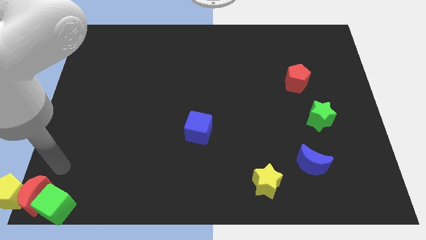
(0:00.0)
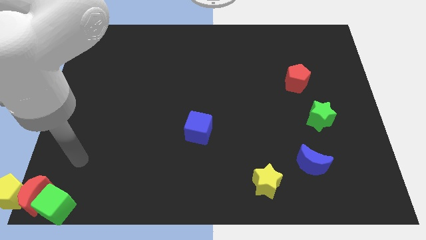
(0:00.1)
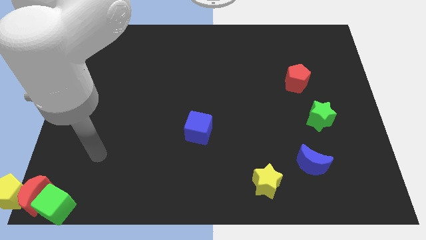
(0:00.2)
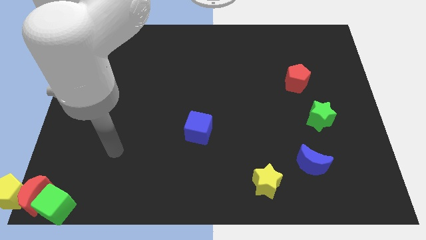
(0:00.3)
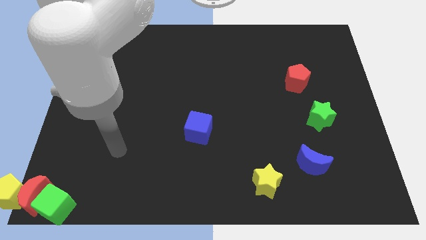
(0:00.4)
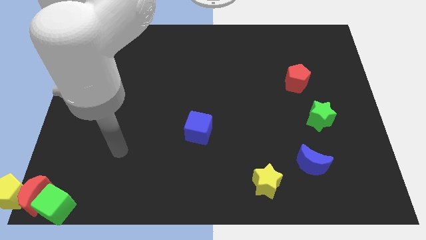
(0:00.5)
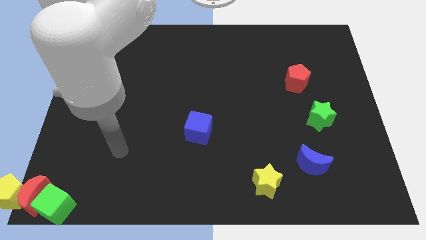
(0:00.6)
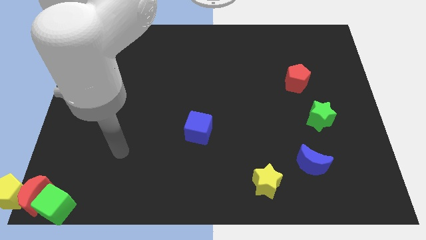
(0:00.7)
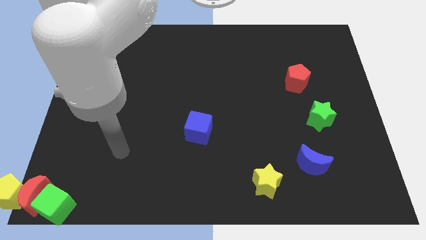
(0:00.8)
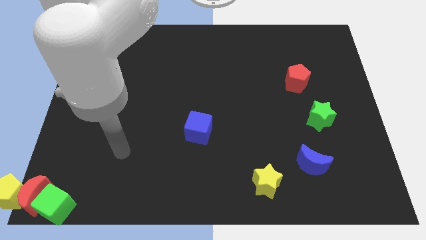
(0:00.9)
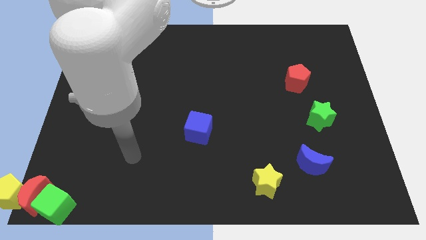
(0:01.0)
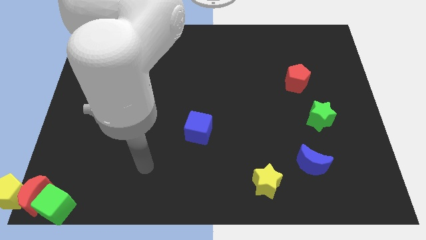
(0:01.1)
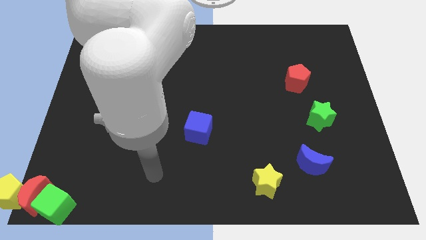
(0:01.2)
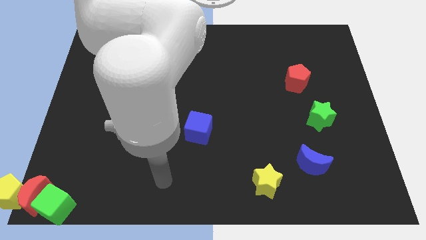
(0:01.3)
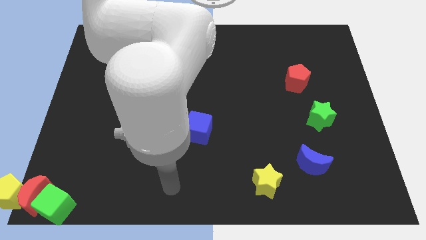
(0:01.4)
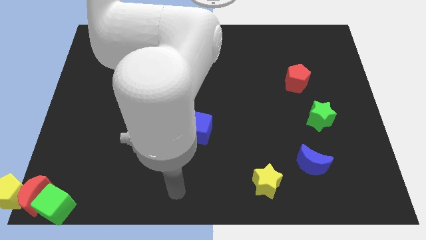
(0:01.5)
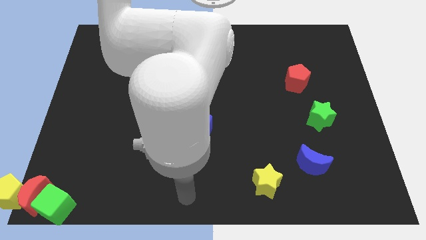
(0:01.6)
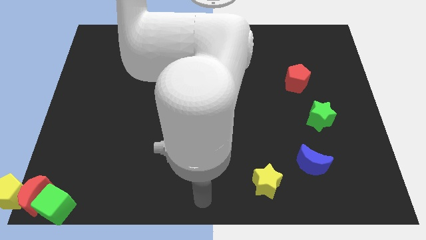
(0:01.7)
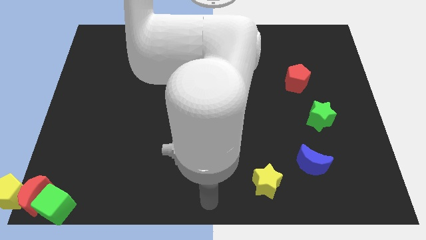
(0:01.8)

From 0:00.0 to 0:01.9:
move your hand to the bottom center of the board

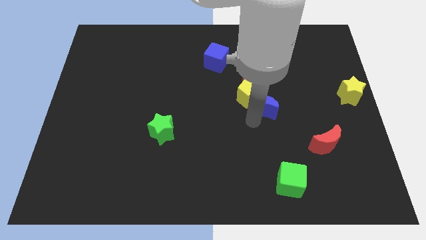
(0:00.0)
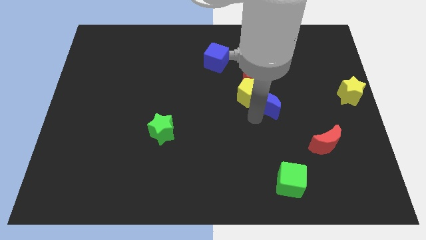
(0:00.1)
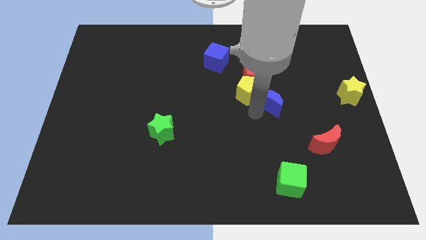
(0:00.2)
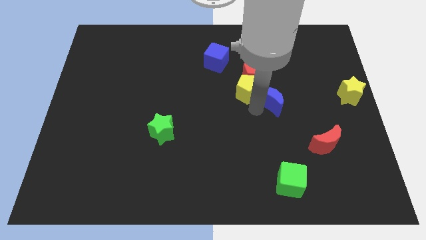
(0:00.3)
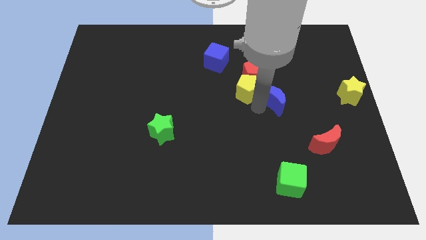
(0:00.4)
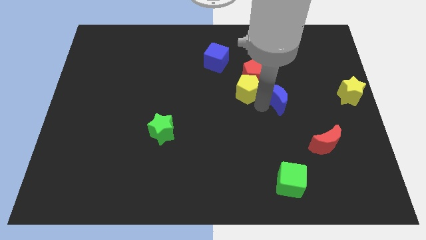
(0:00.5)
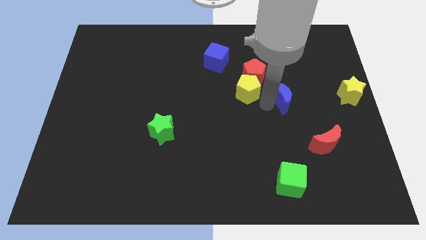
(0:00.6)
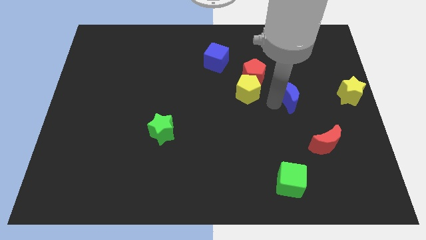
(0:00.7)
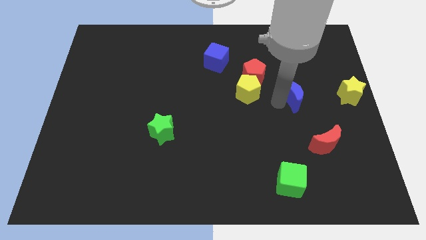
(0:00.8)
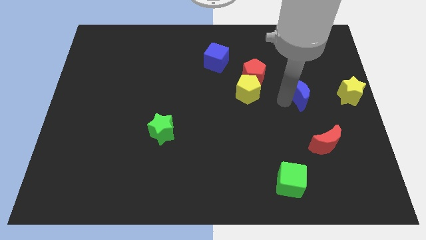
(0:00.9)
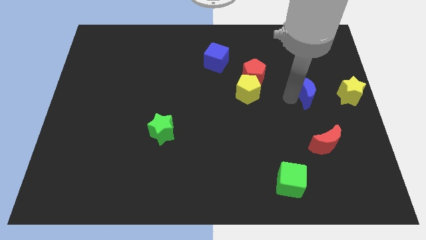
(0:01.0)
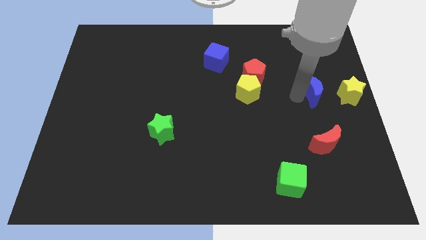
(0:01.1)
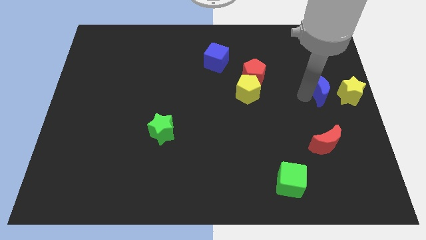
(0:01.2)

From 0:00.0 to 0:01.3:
place the blue moon to the left side of the yellow star
